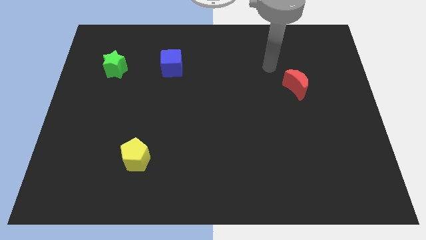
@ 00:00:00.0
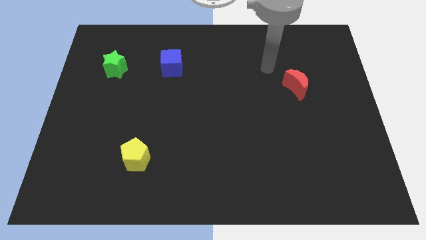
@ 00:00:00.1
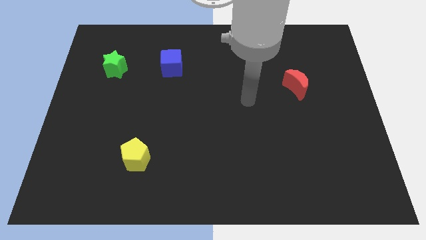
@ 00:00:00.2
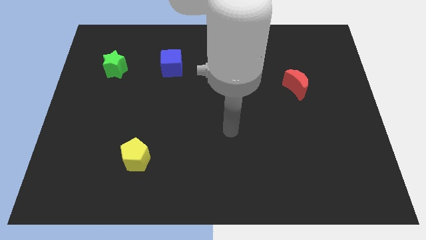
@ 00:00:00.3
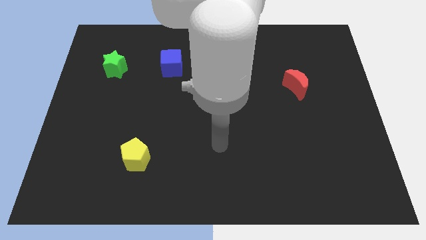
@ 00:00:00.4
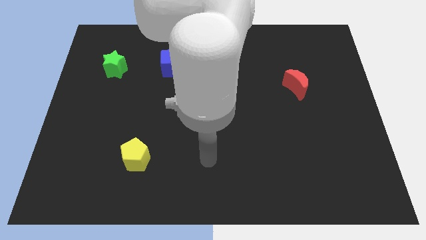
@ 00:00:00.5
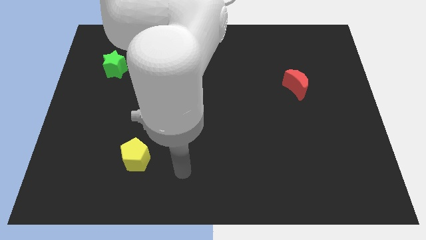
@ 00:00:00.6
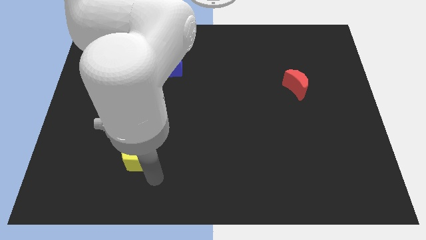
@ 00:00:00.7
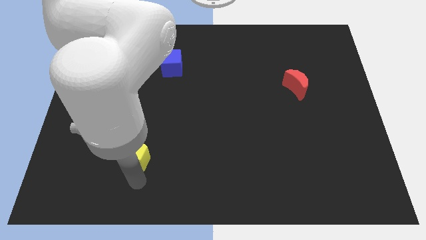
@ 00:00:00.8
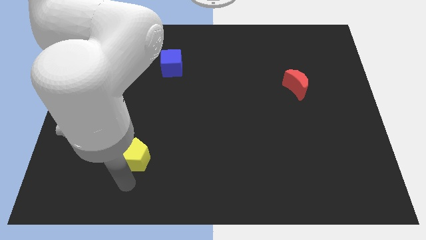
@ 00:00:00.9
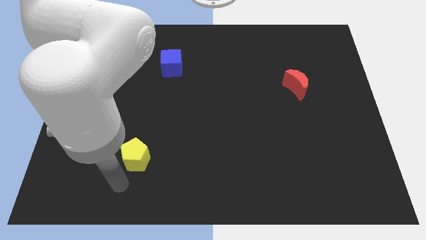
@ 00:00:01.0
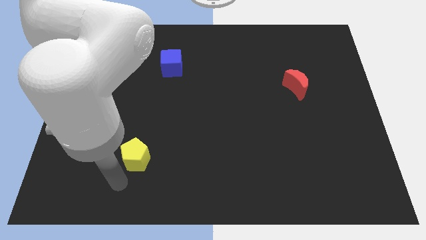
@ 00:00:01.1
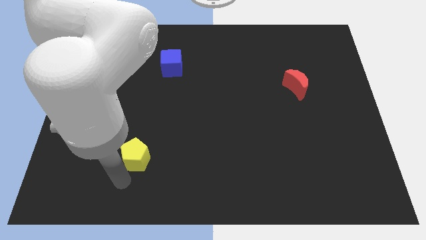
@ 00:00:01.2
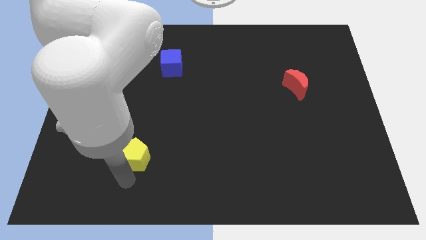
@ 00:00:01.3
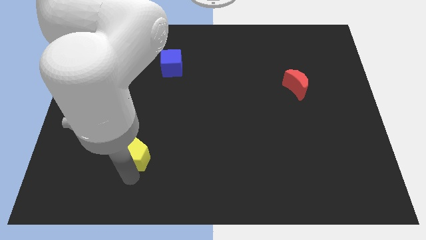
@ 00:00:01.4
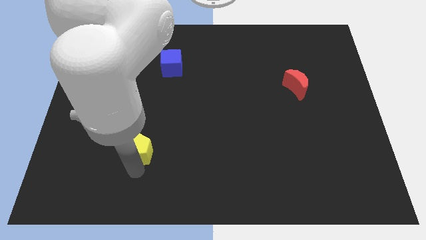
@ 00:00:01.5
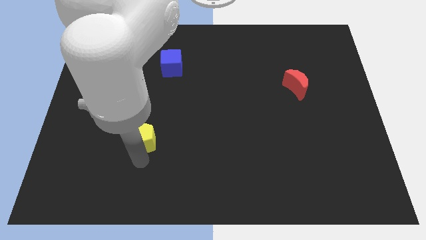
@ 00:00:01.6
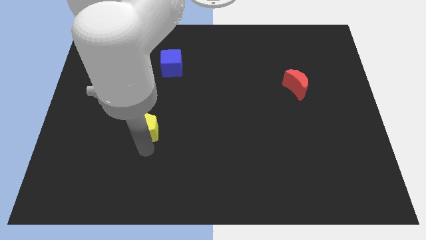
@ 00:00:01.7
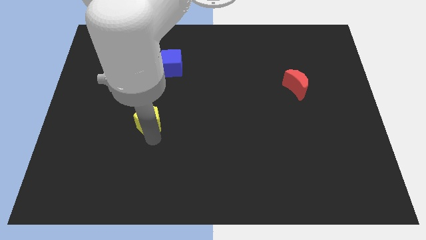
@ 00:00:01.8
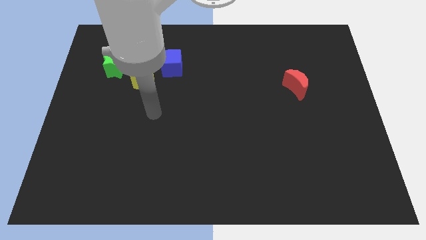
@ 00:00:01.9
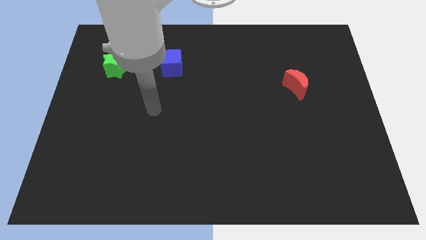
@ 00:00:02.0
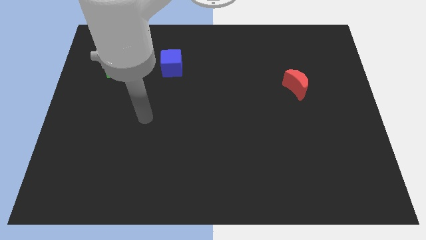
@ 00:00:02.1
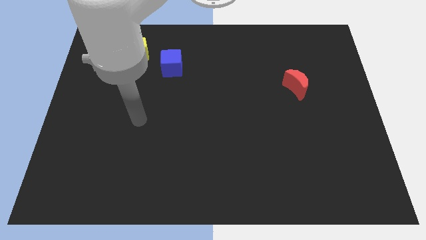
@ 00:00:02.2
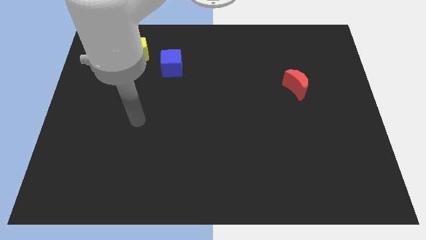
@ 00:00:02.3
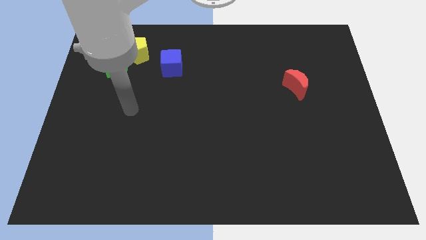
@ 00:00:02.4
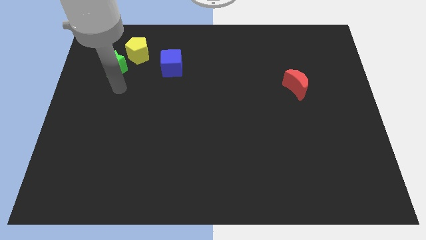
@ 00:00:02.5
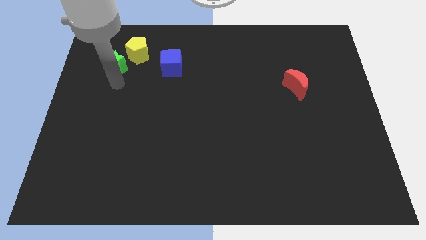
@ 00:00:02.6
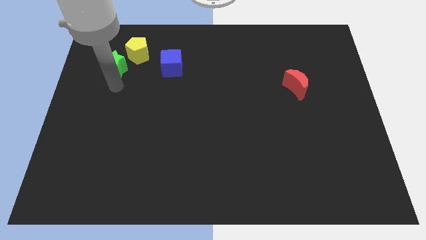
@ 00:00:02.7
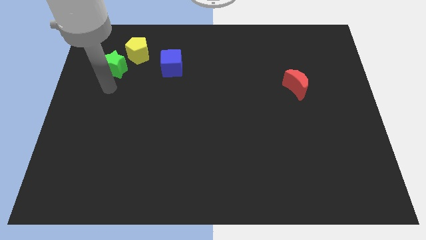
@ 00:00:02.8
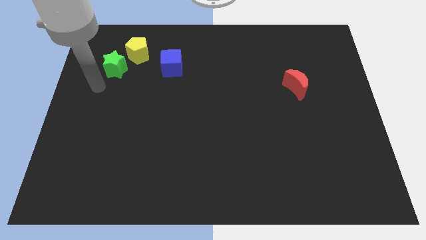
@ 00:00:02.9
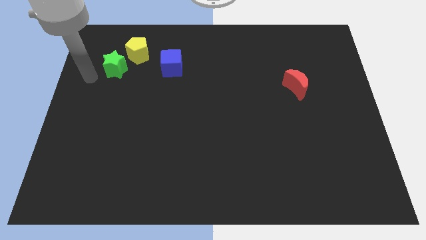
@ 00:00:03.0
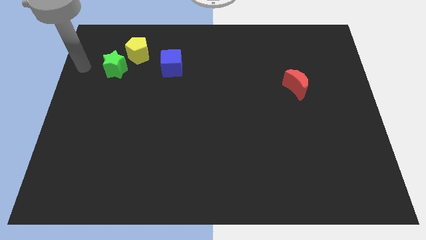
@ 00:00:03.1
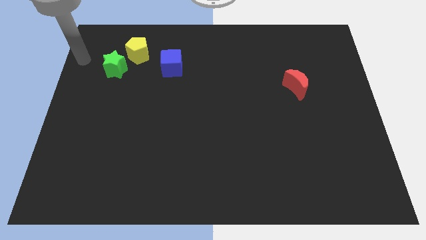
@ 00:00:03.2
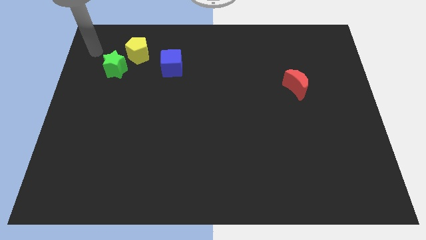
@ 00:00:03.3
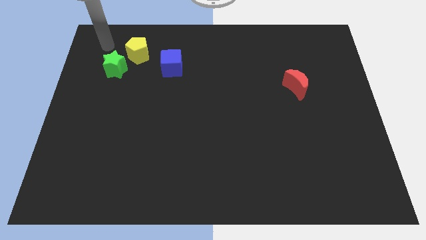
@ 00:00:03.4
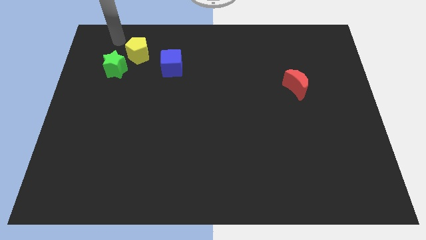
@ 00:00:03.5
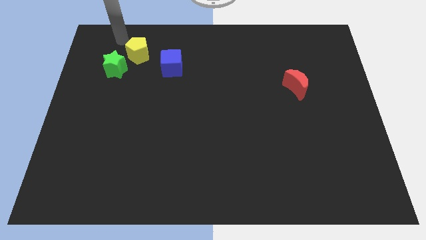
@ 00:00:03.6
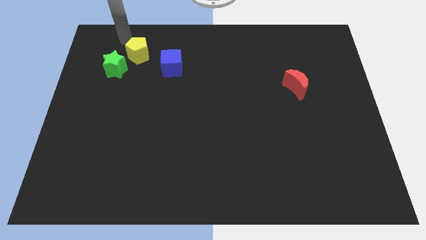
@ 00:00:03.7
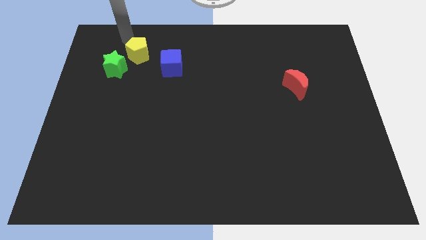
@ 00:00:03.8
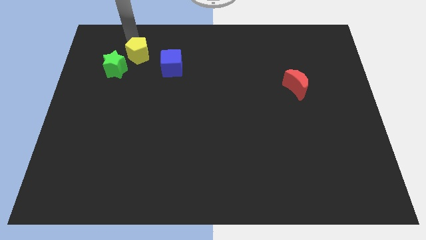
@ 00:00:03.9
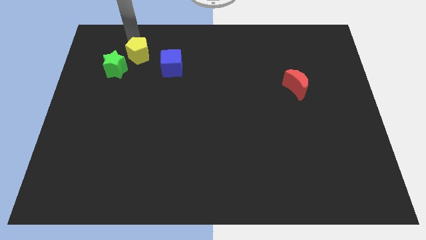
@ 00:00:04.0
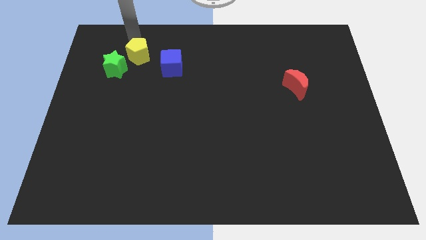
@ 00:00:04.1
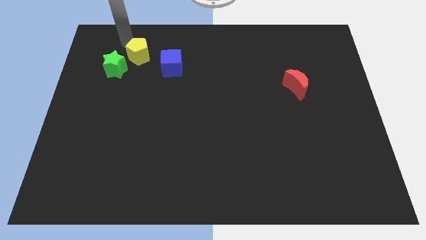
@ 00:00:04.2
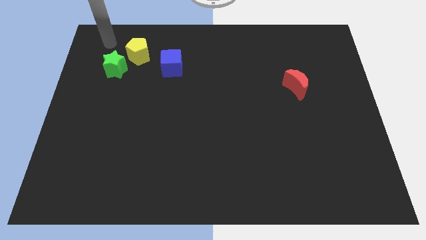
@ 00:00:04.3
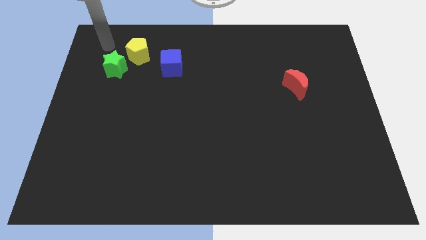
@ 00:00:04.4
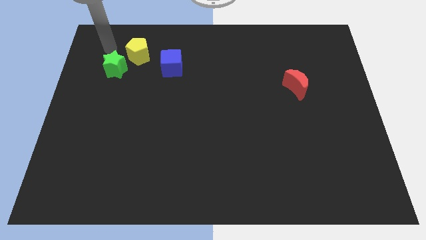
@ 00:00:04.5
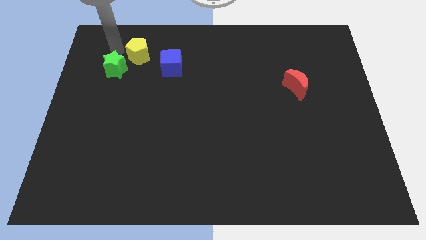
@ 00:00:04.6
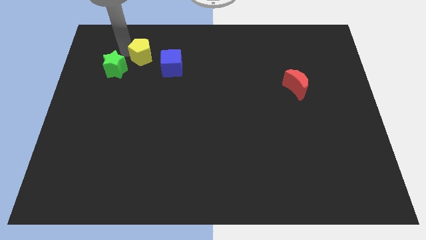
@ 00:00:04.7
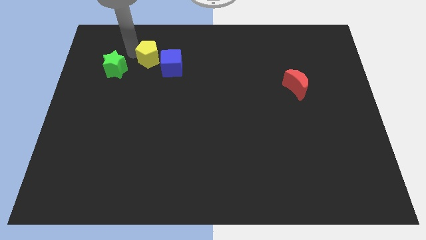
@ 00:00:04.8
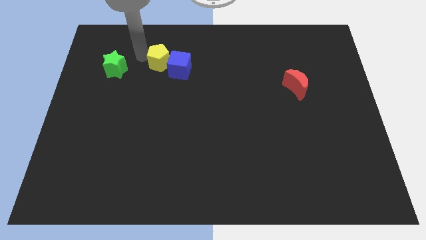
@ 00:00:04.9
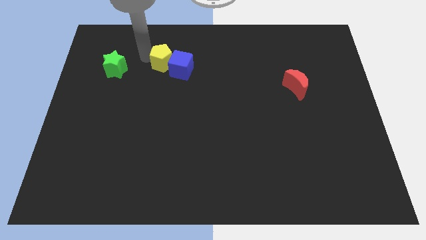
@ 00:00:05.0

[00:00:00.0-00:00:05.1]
move the pentagon close to the blue cube

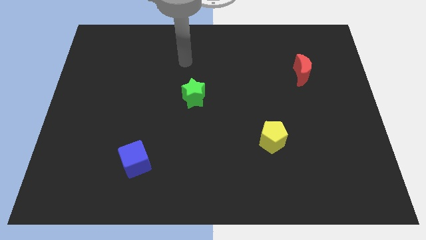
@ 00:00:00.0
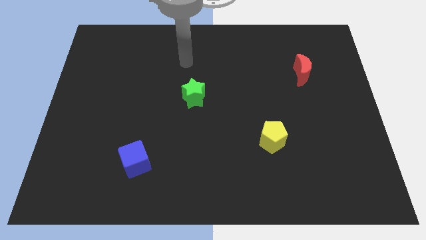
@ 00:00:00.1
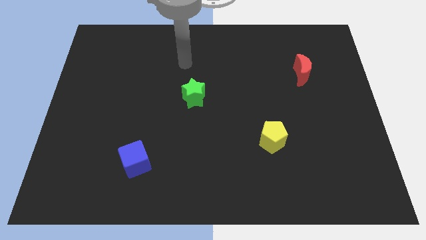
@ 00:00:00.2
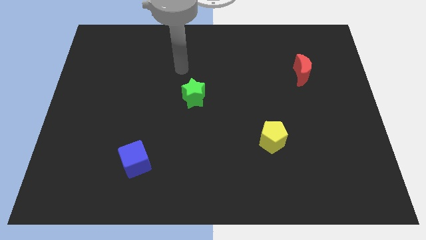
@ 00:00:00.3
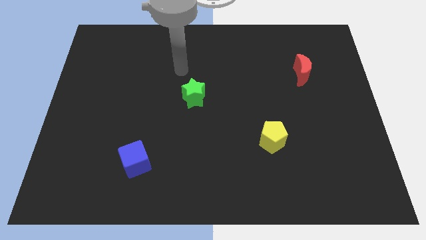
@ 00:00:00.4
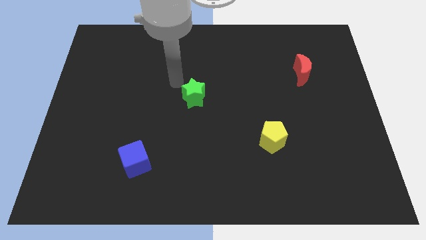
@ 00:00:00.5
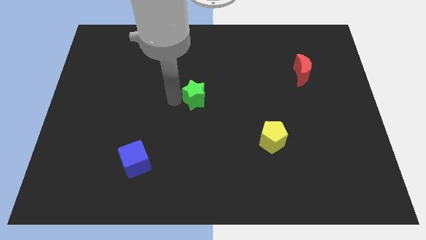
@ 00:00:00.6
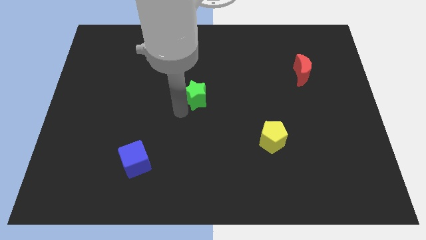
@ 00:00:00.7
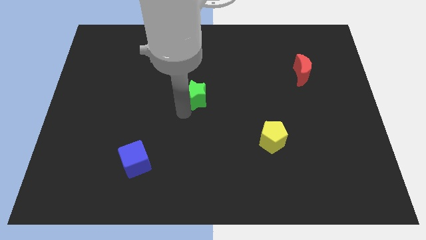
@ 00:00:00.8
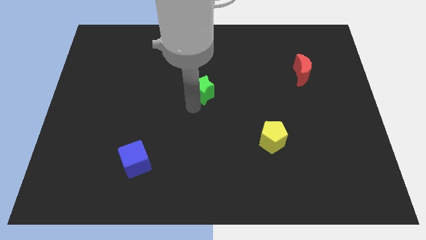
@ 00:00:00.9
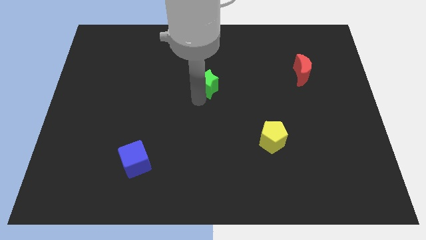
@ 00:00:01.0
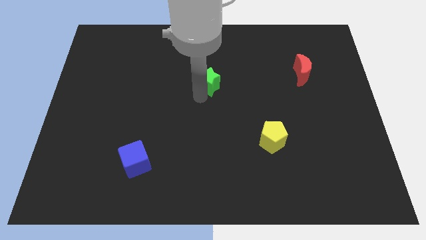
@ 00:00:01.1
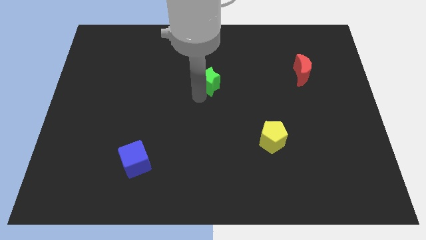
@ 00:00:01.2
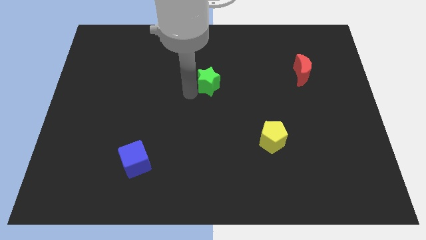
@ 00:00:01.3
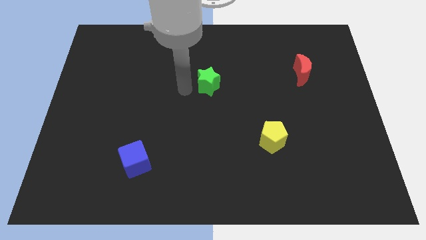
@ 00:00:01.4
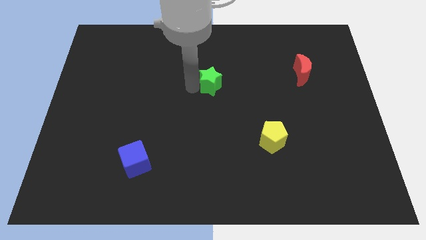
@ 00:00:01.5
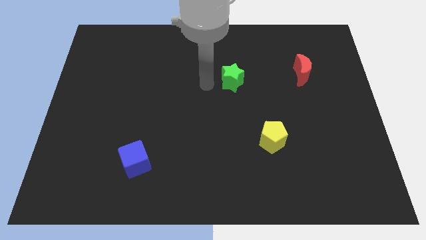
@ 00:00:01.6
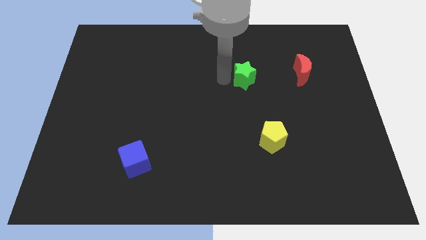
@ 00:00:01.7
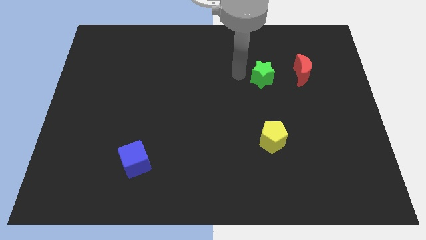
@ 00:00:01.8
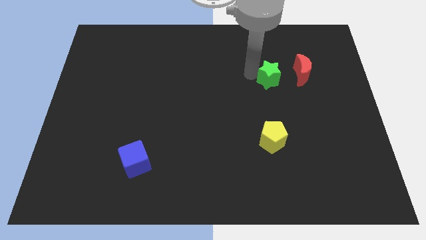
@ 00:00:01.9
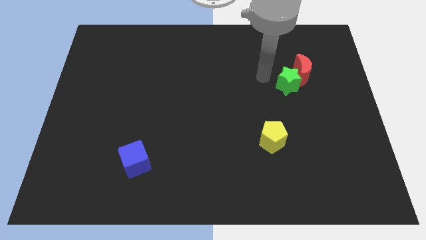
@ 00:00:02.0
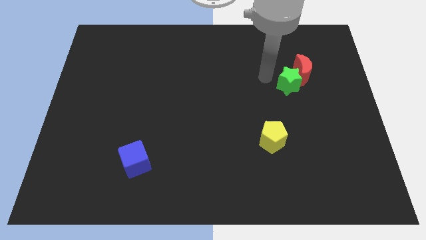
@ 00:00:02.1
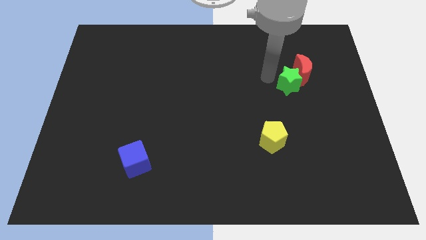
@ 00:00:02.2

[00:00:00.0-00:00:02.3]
move the green block towards the red block

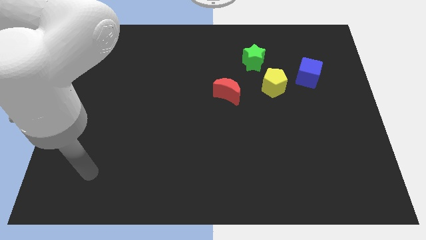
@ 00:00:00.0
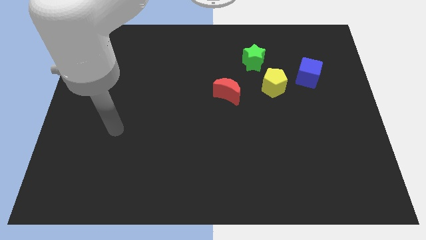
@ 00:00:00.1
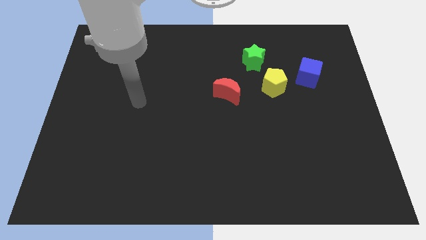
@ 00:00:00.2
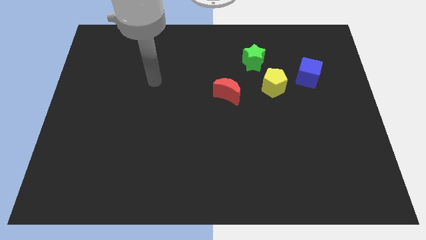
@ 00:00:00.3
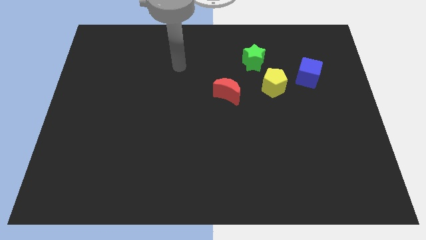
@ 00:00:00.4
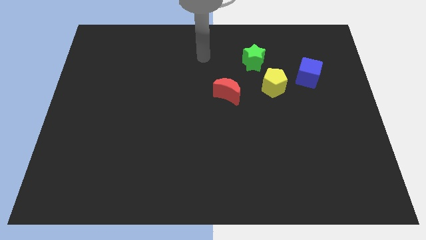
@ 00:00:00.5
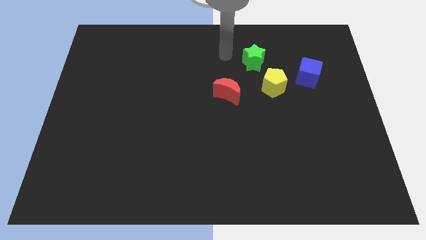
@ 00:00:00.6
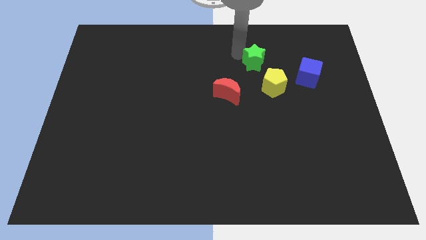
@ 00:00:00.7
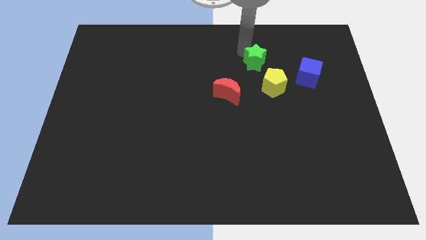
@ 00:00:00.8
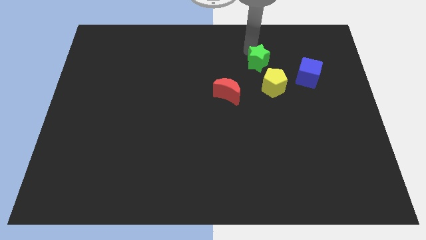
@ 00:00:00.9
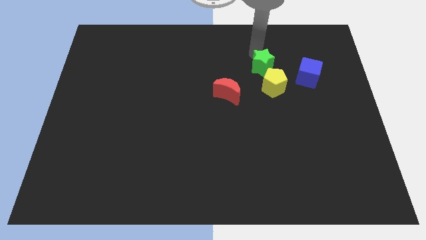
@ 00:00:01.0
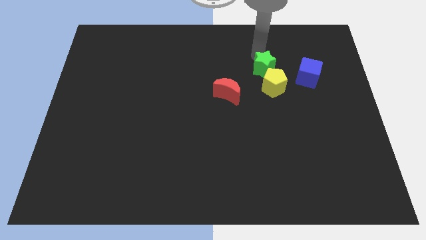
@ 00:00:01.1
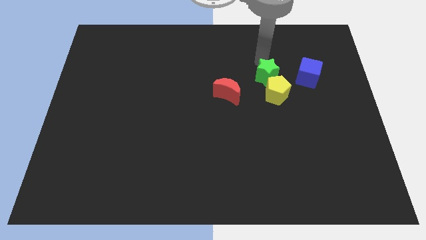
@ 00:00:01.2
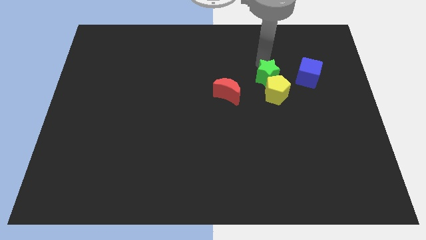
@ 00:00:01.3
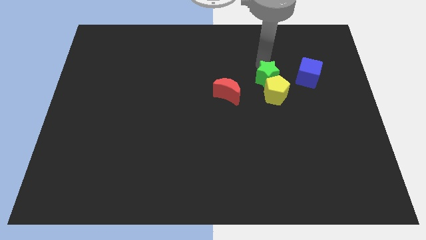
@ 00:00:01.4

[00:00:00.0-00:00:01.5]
put the green star towards the yellow pentagon
